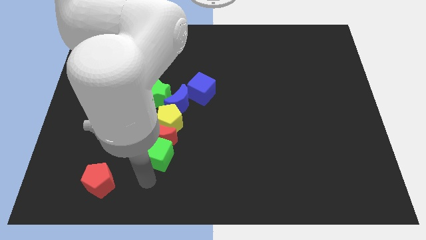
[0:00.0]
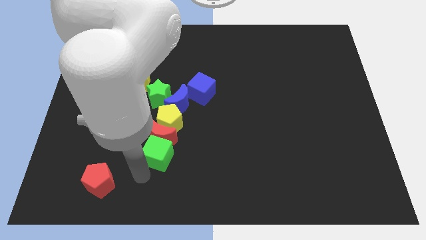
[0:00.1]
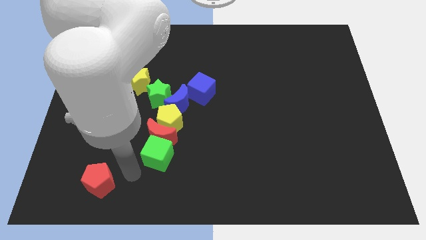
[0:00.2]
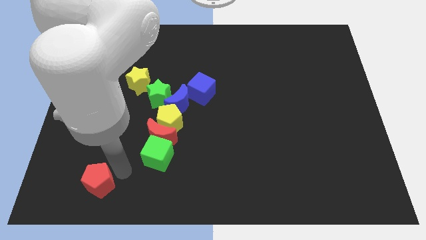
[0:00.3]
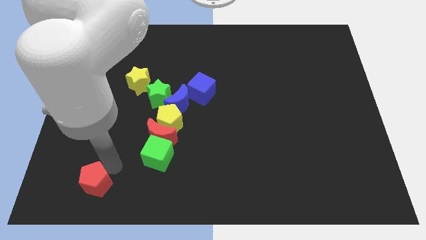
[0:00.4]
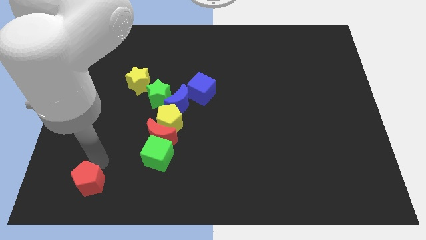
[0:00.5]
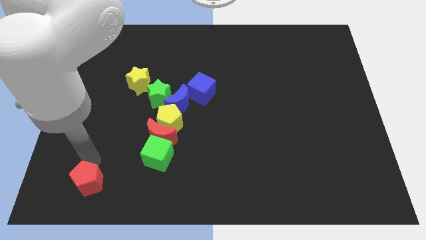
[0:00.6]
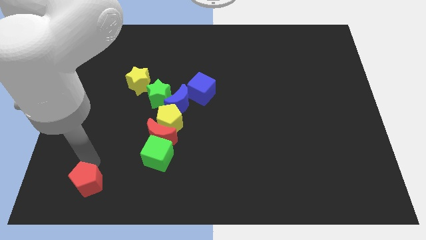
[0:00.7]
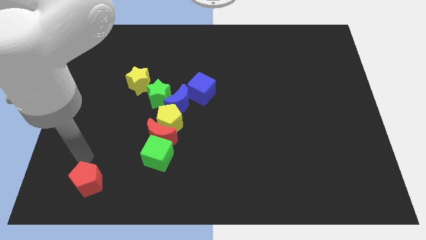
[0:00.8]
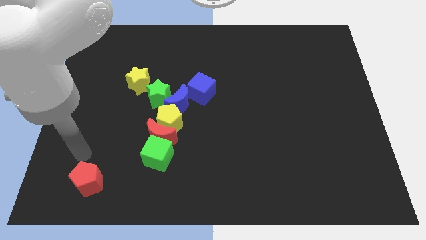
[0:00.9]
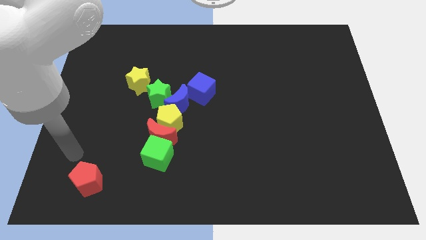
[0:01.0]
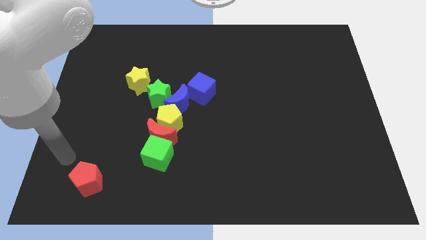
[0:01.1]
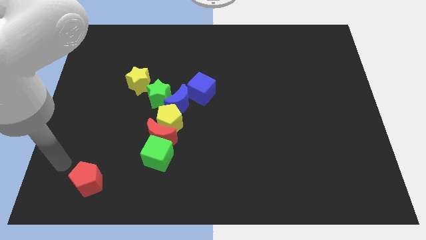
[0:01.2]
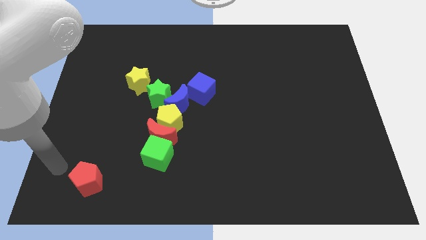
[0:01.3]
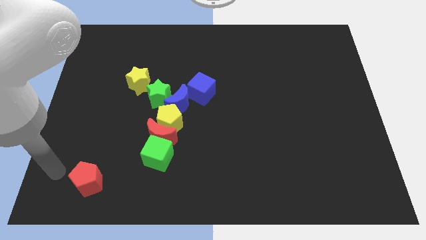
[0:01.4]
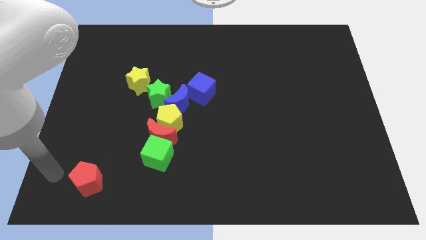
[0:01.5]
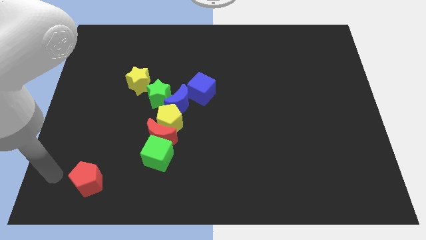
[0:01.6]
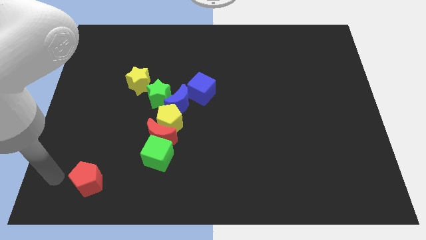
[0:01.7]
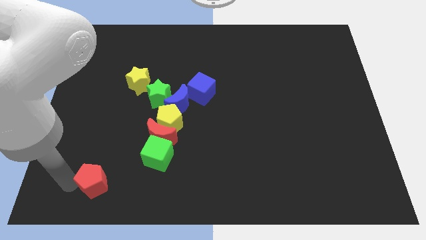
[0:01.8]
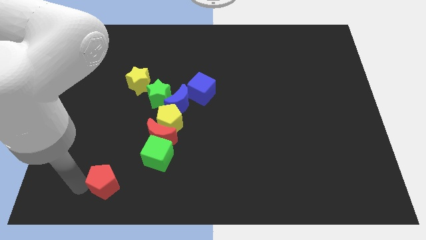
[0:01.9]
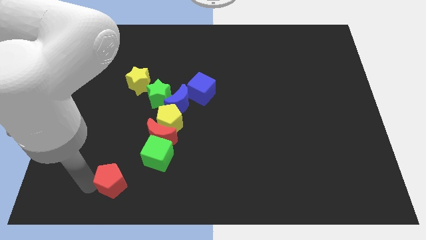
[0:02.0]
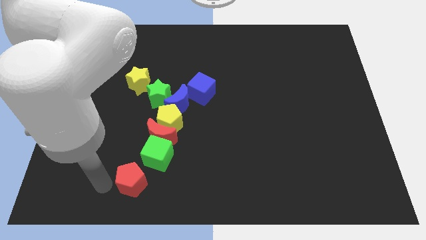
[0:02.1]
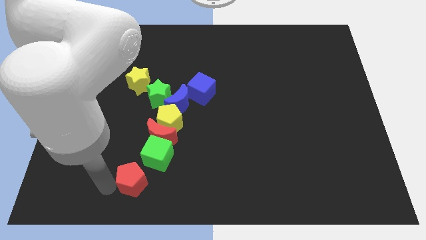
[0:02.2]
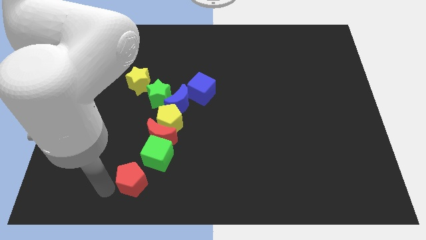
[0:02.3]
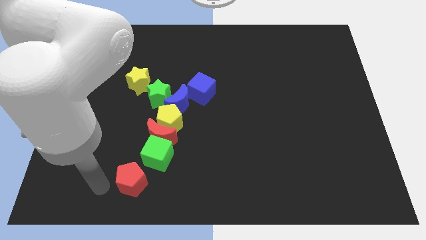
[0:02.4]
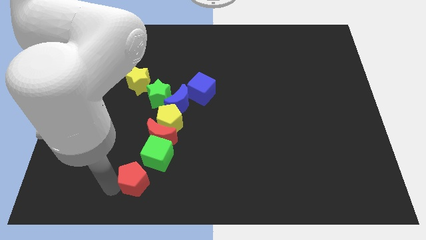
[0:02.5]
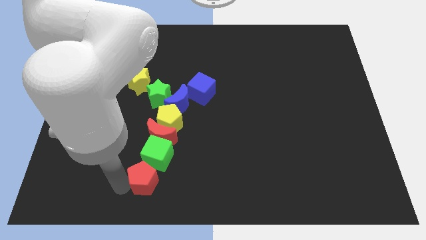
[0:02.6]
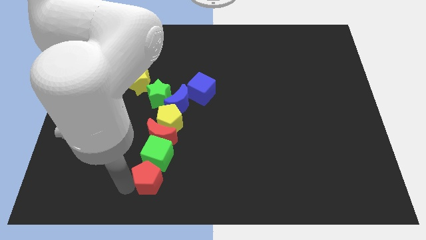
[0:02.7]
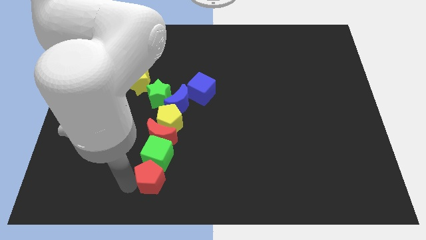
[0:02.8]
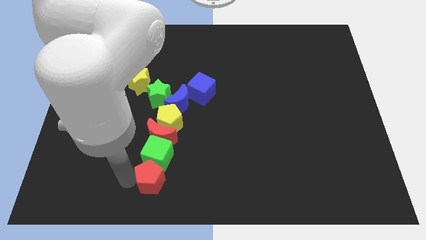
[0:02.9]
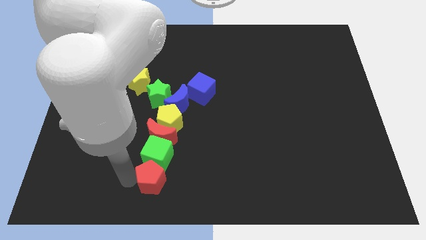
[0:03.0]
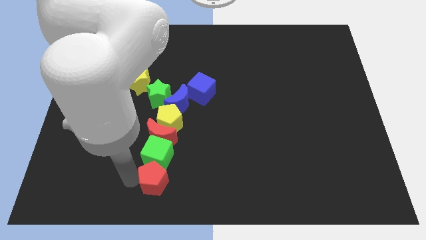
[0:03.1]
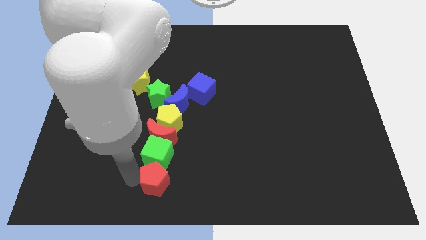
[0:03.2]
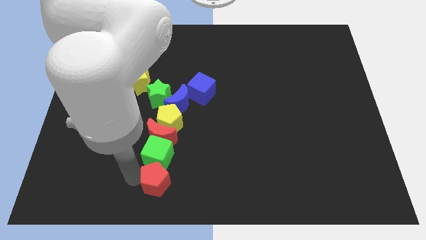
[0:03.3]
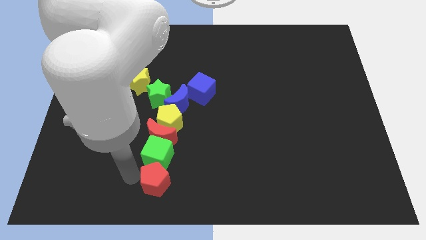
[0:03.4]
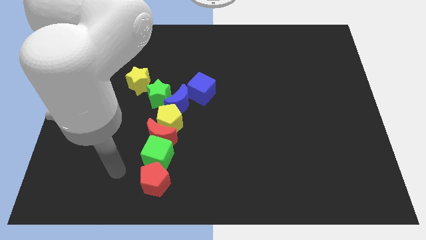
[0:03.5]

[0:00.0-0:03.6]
push the red pentagon below the green cube

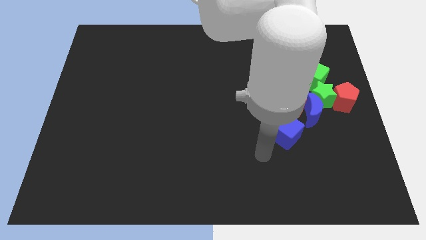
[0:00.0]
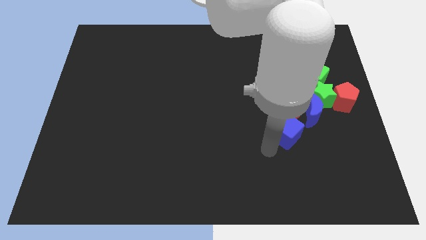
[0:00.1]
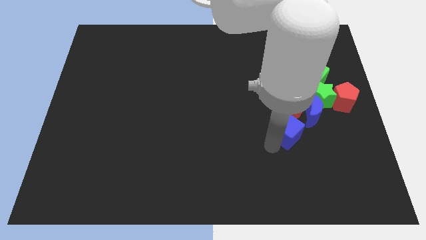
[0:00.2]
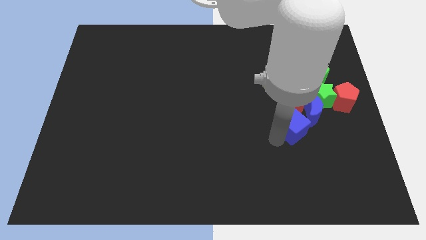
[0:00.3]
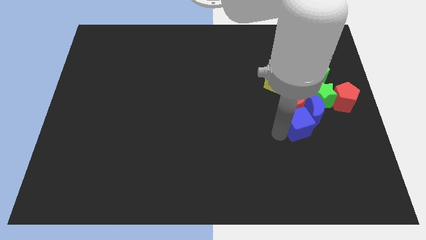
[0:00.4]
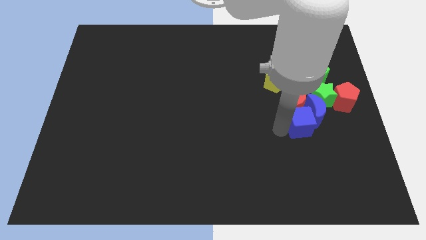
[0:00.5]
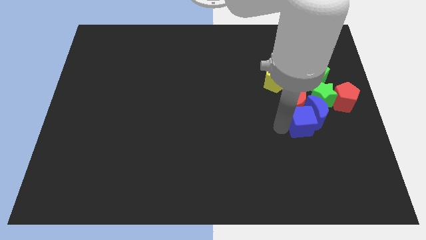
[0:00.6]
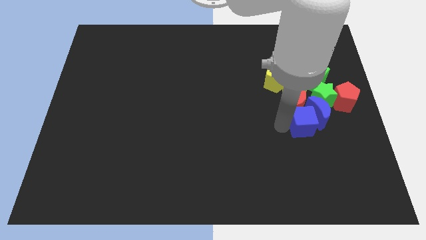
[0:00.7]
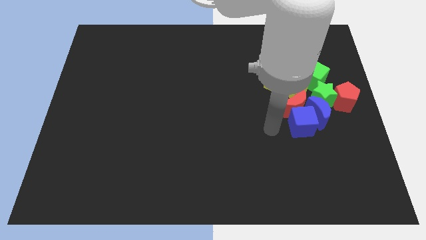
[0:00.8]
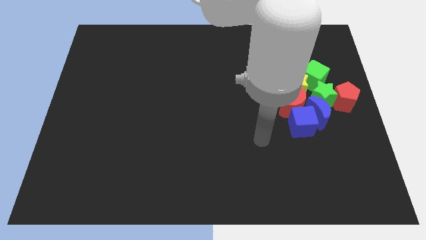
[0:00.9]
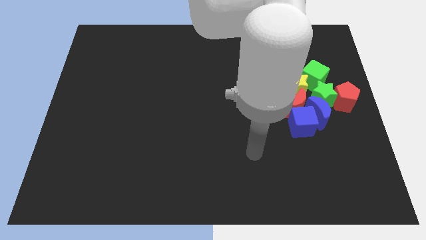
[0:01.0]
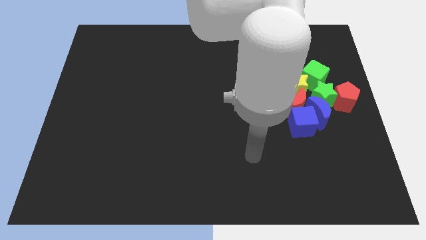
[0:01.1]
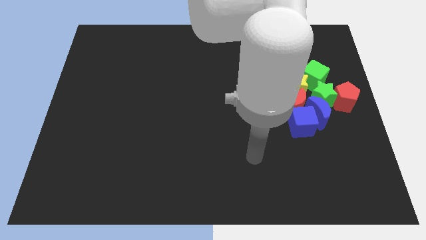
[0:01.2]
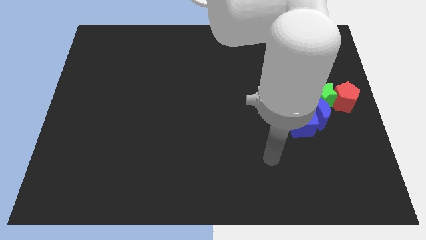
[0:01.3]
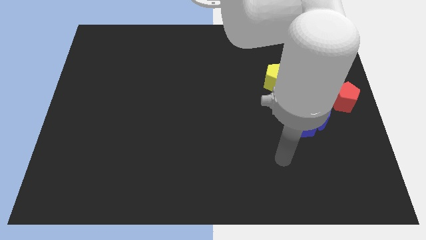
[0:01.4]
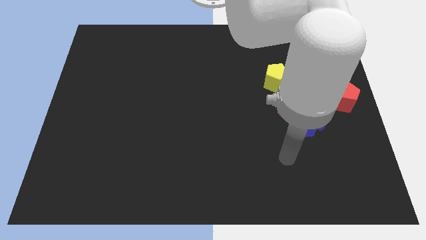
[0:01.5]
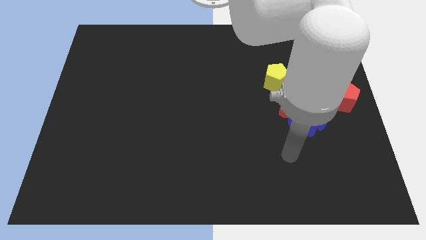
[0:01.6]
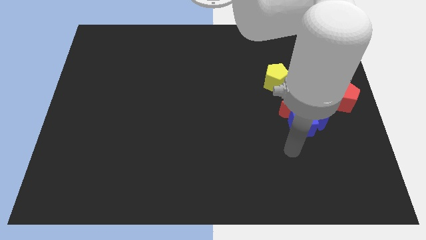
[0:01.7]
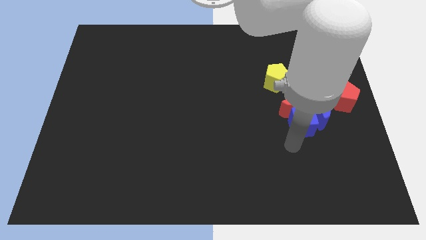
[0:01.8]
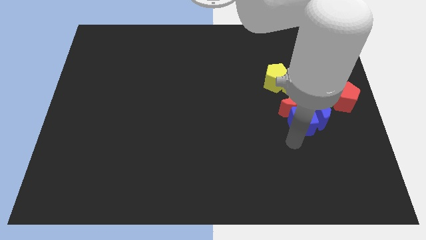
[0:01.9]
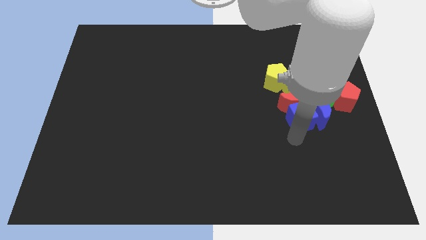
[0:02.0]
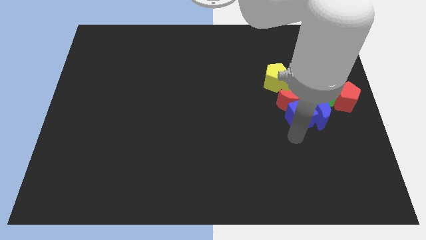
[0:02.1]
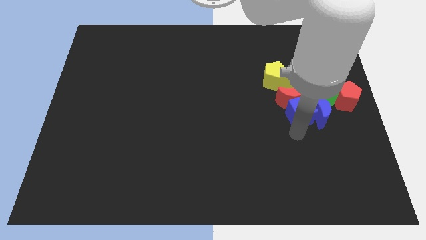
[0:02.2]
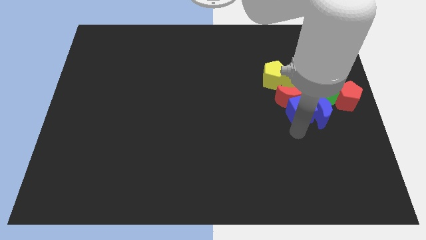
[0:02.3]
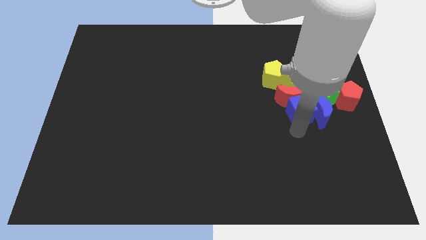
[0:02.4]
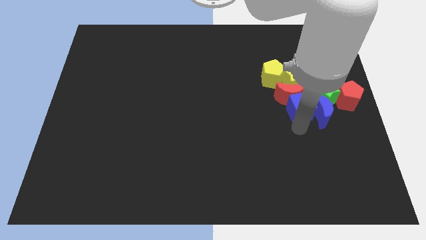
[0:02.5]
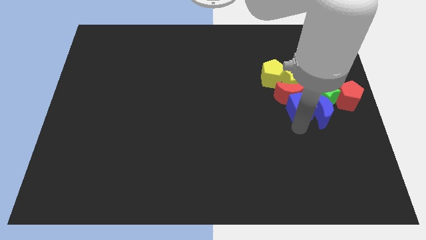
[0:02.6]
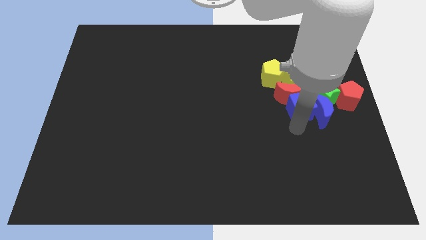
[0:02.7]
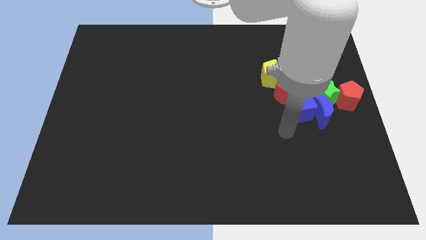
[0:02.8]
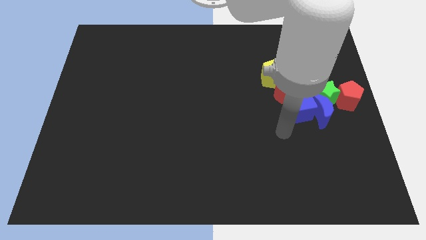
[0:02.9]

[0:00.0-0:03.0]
push the blue cube into the red and blue moon

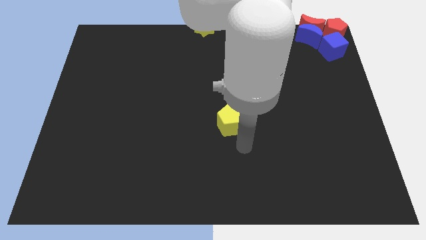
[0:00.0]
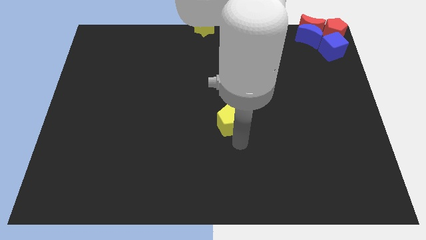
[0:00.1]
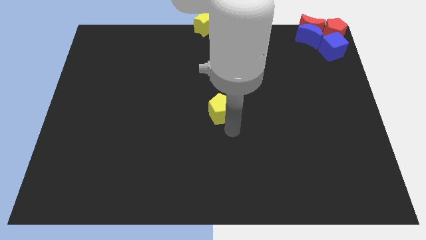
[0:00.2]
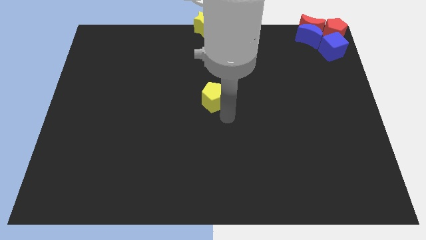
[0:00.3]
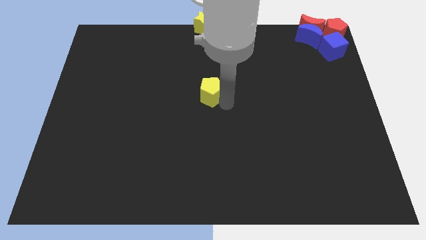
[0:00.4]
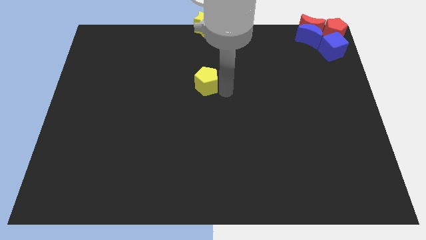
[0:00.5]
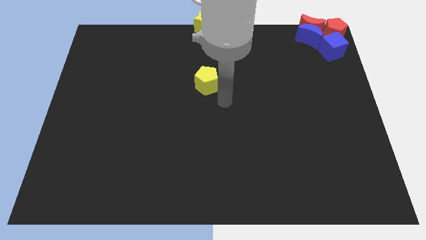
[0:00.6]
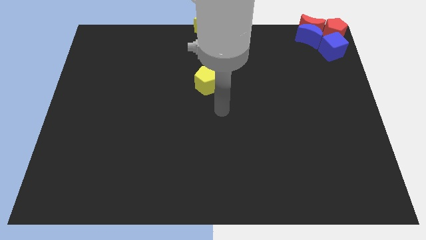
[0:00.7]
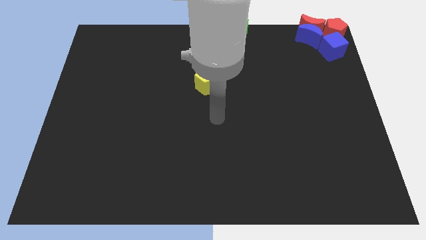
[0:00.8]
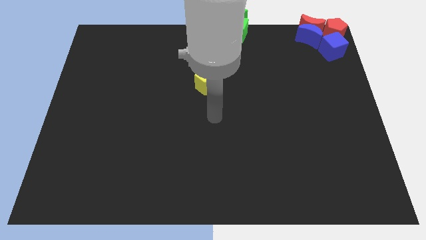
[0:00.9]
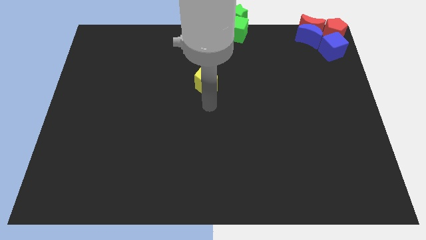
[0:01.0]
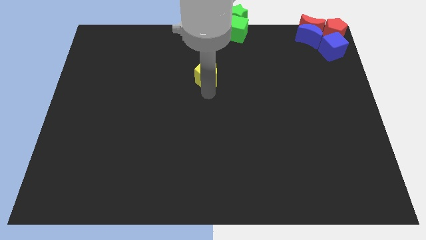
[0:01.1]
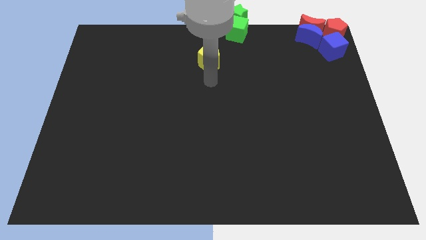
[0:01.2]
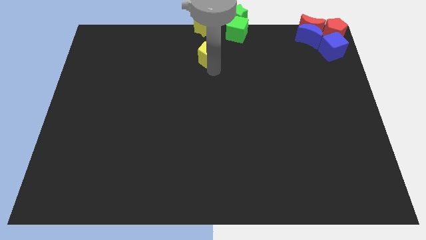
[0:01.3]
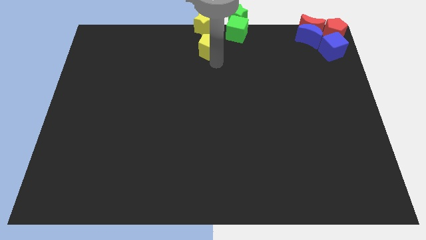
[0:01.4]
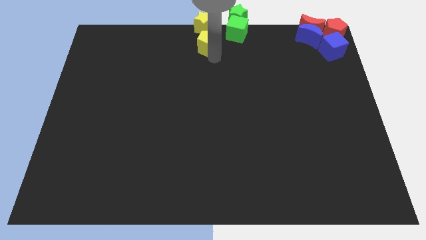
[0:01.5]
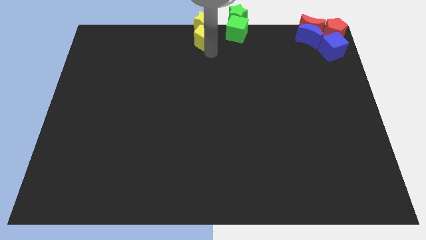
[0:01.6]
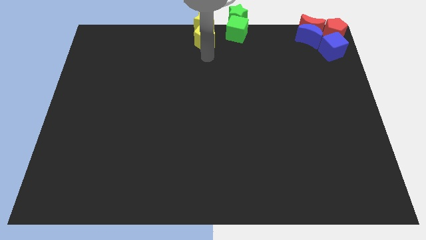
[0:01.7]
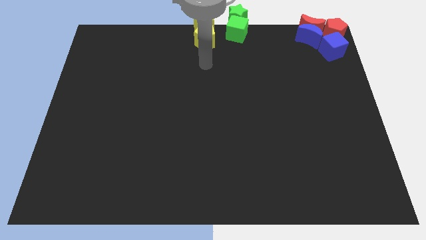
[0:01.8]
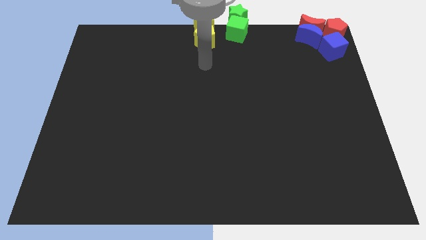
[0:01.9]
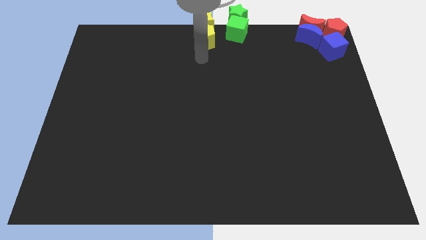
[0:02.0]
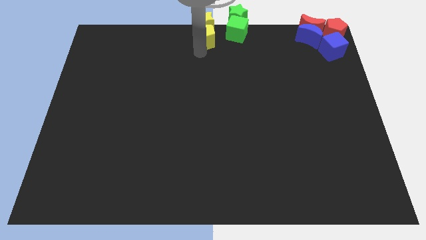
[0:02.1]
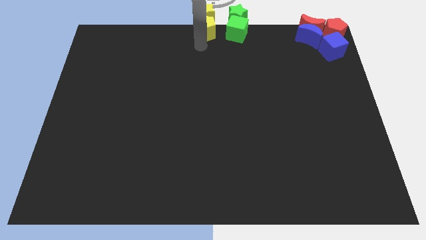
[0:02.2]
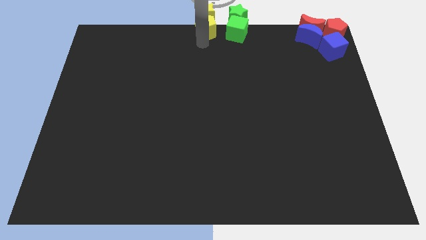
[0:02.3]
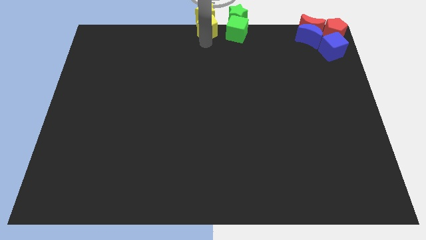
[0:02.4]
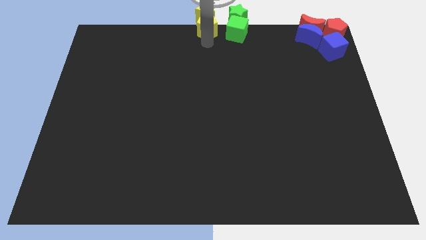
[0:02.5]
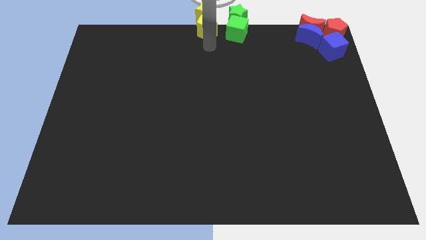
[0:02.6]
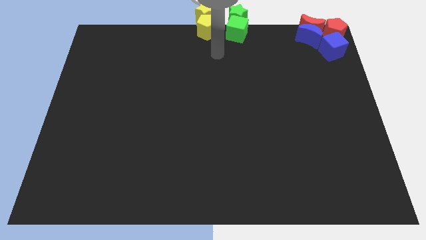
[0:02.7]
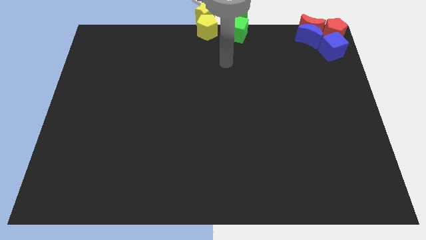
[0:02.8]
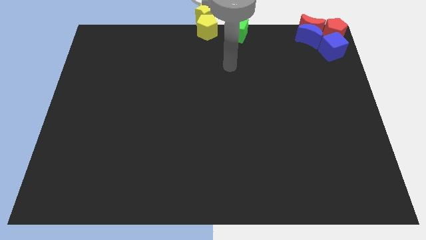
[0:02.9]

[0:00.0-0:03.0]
move the yellow pentagon close to the yellow star to the top center of the board
